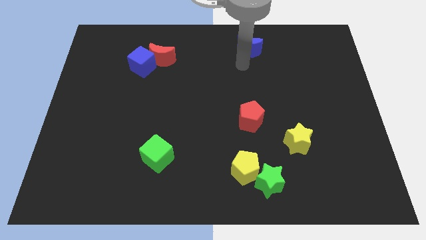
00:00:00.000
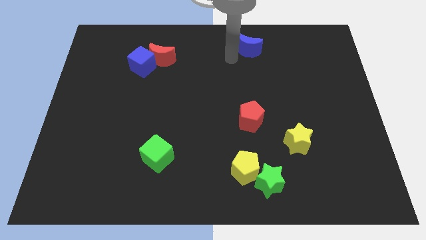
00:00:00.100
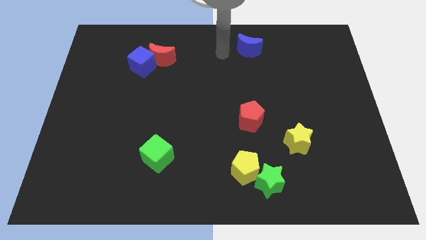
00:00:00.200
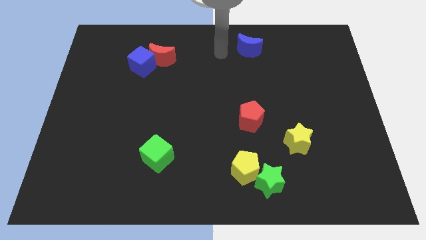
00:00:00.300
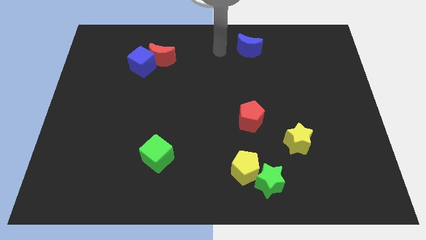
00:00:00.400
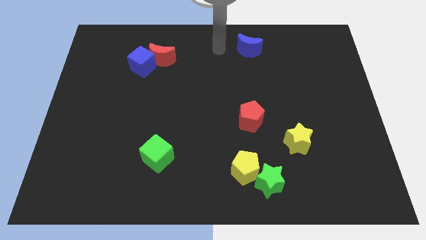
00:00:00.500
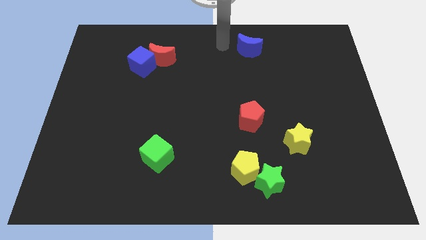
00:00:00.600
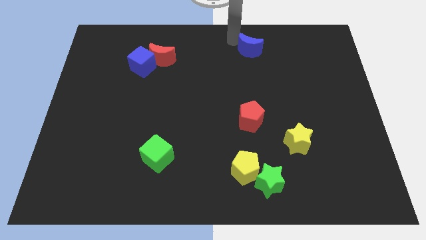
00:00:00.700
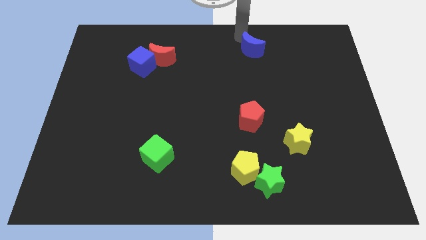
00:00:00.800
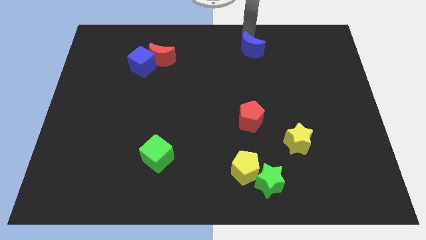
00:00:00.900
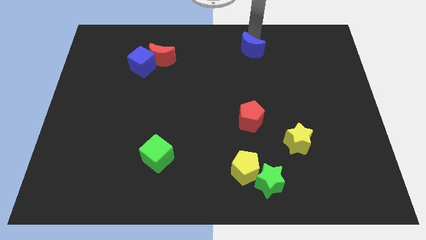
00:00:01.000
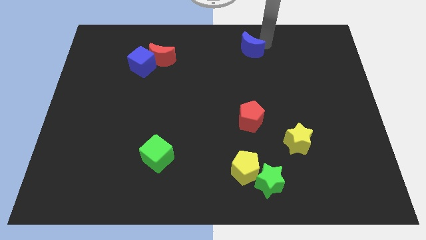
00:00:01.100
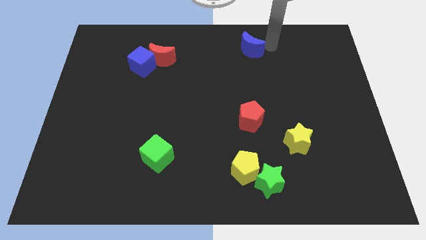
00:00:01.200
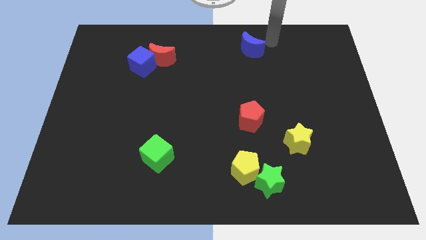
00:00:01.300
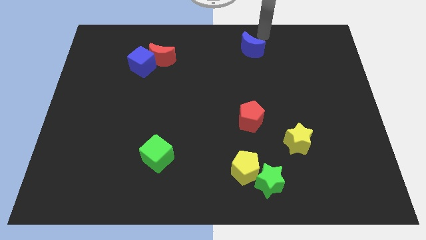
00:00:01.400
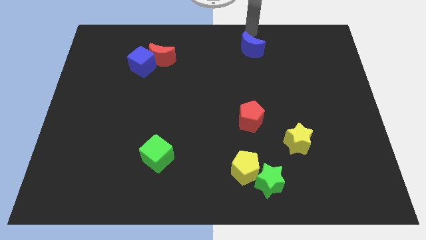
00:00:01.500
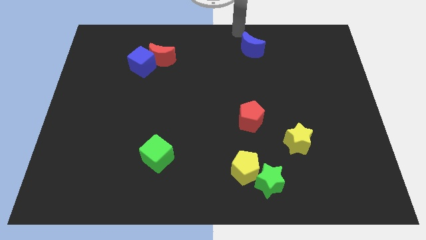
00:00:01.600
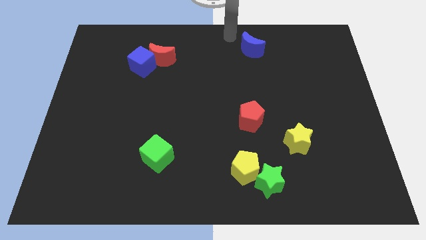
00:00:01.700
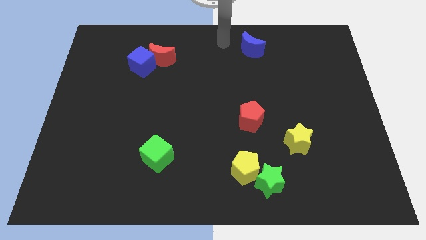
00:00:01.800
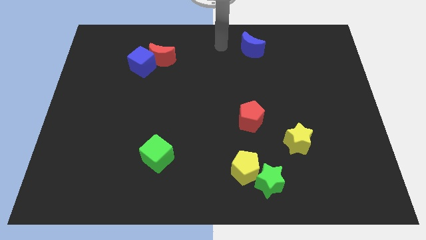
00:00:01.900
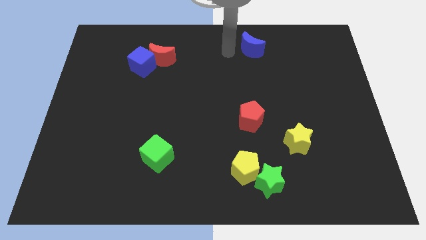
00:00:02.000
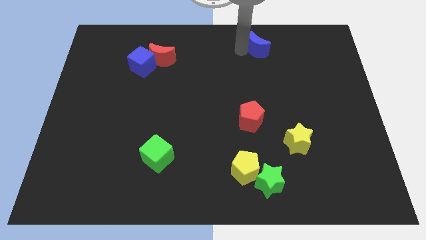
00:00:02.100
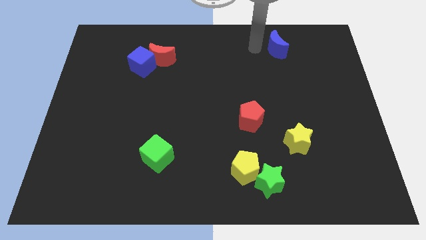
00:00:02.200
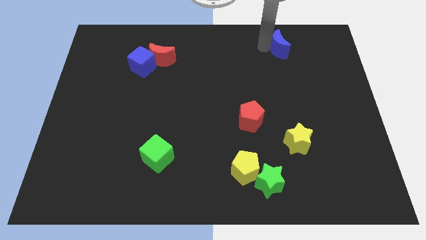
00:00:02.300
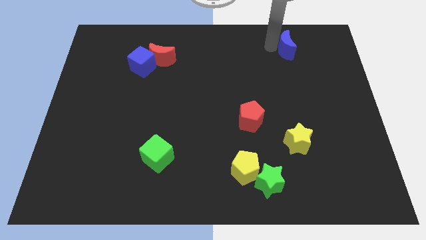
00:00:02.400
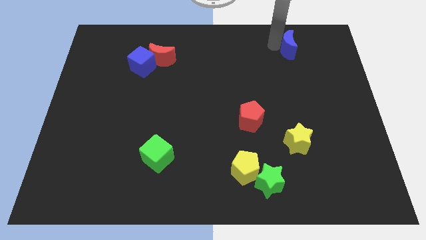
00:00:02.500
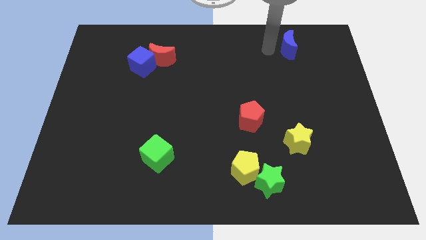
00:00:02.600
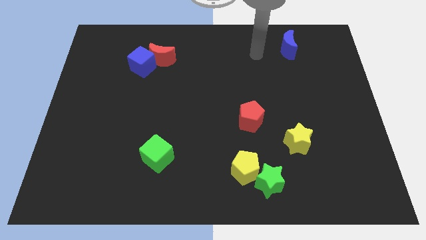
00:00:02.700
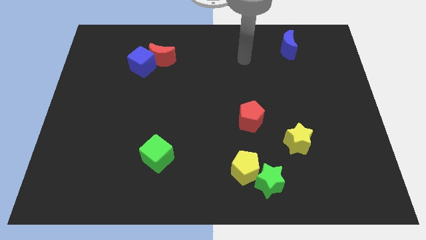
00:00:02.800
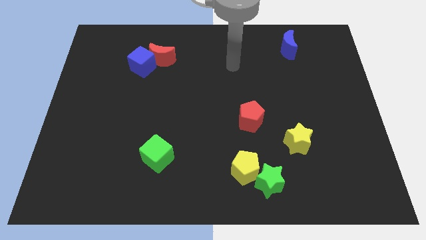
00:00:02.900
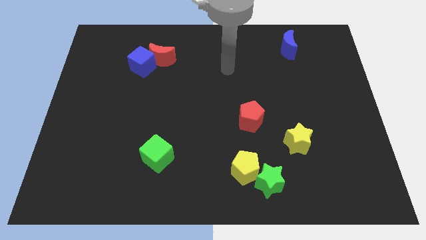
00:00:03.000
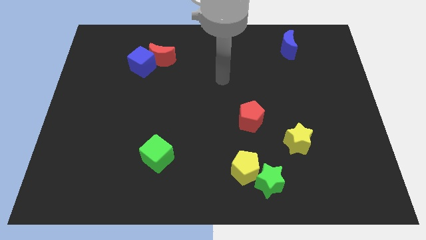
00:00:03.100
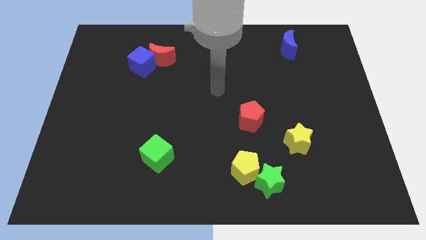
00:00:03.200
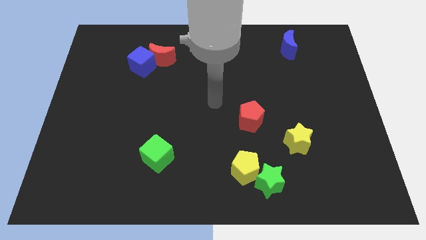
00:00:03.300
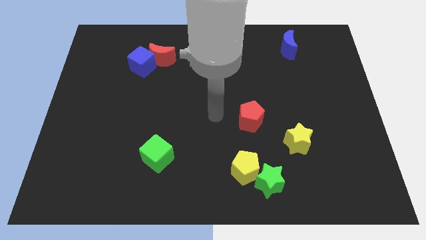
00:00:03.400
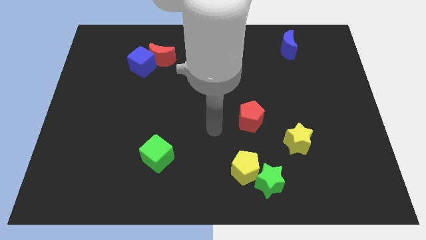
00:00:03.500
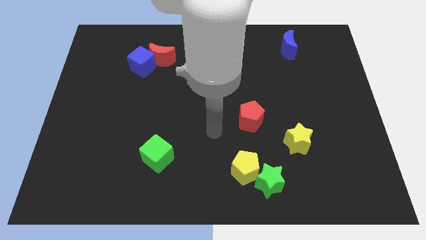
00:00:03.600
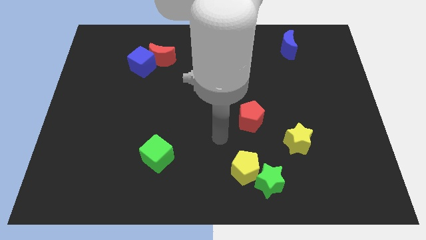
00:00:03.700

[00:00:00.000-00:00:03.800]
slide the blue crescent diagonally top right to the red pentagon

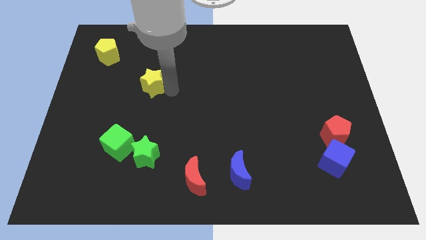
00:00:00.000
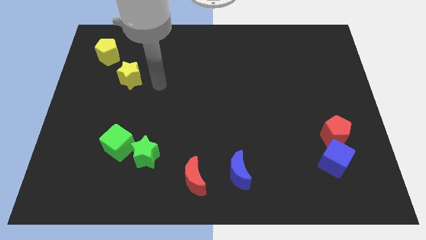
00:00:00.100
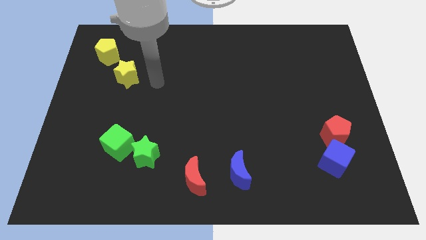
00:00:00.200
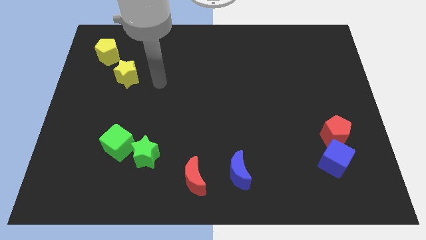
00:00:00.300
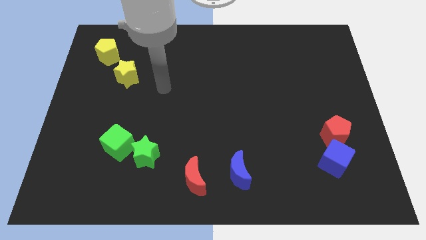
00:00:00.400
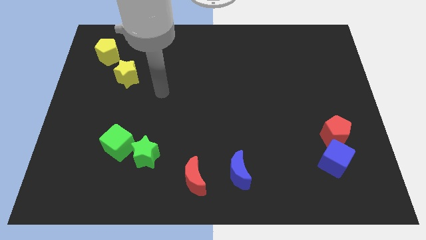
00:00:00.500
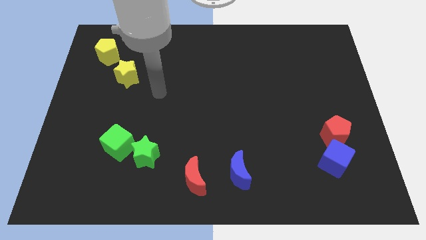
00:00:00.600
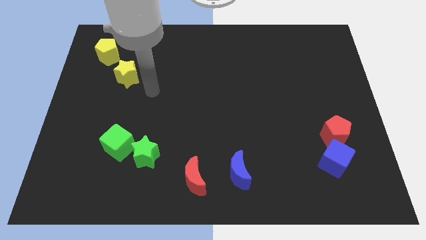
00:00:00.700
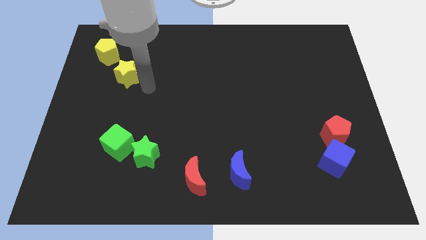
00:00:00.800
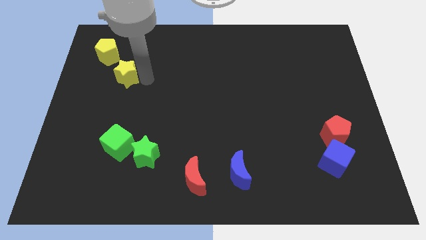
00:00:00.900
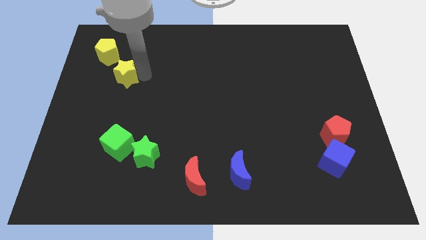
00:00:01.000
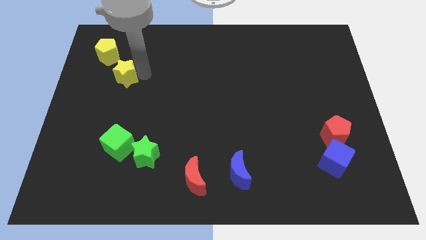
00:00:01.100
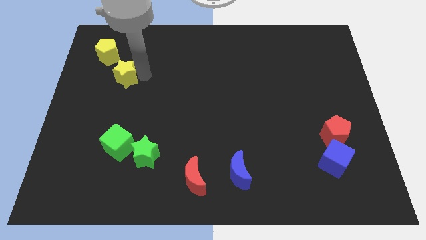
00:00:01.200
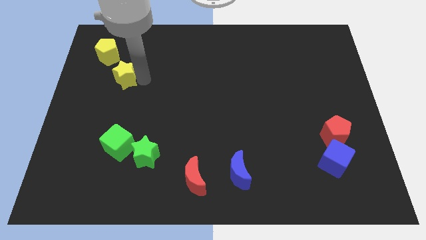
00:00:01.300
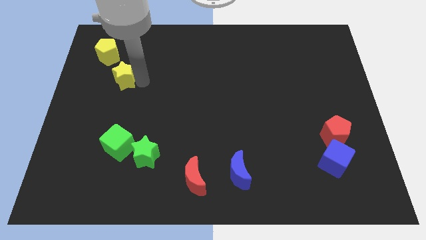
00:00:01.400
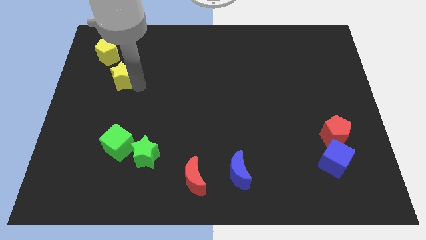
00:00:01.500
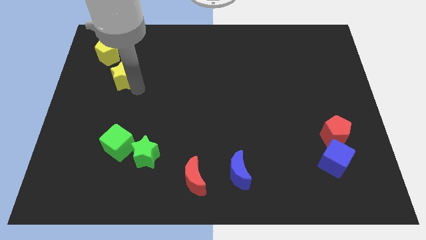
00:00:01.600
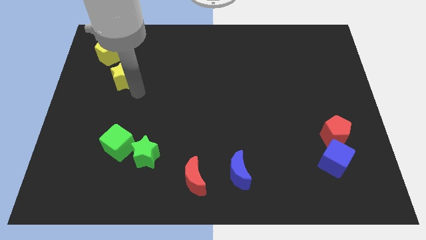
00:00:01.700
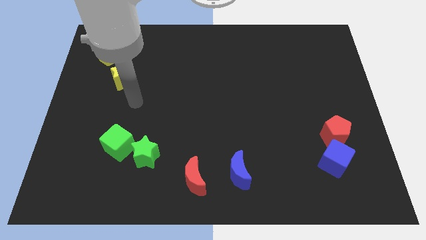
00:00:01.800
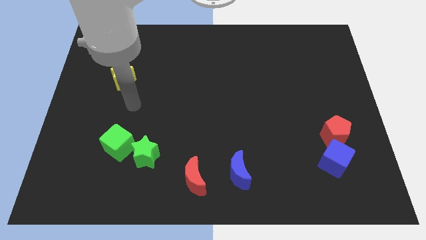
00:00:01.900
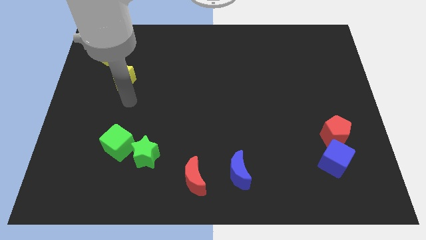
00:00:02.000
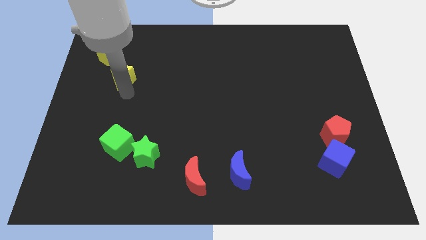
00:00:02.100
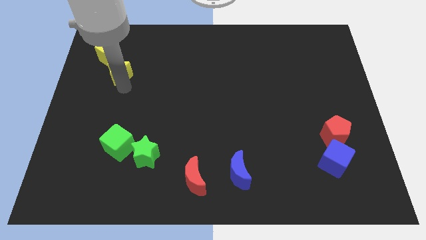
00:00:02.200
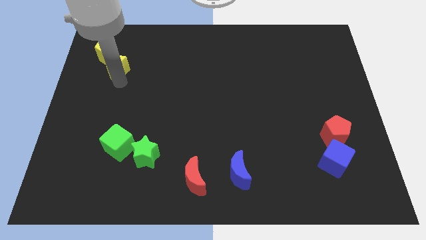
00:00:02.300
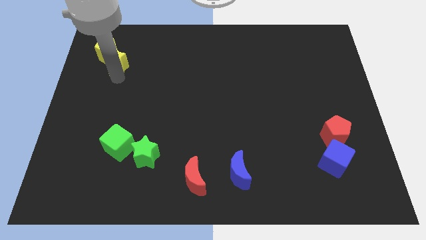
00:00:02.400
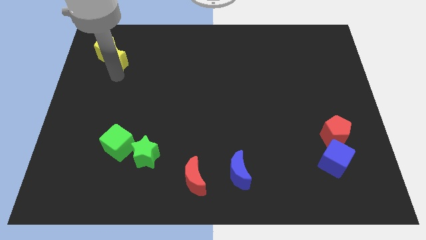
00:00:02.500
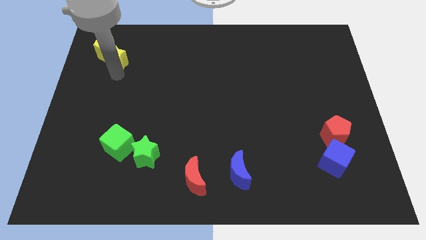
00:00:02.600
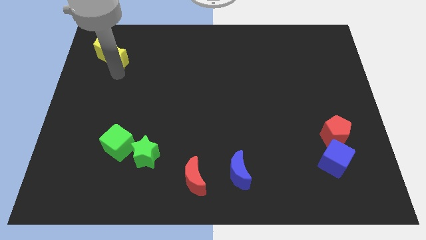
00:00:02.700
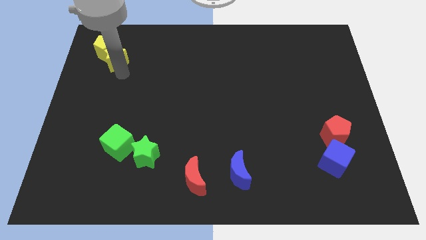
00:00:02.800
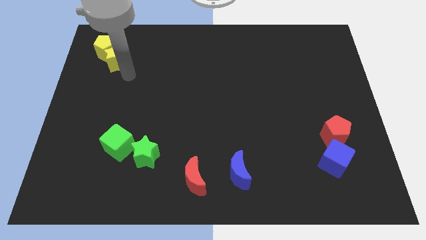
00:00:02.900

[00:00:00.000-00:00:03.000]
push the yellow star into the yellow pentagon

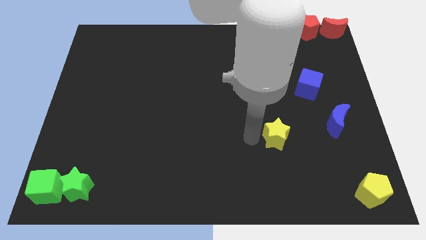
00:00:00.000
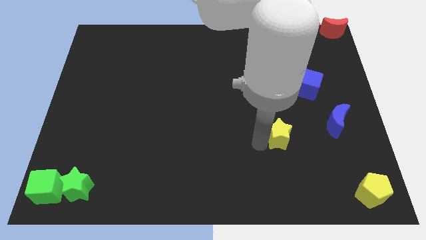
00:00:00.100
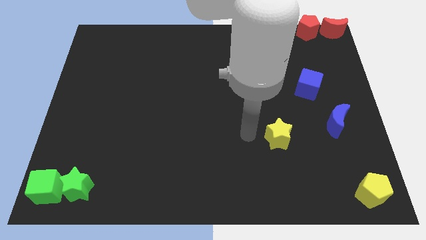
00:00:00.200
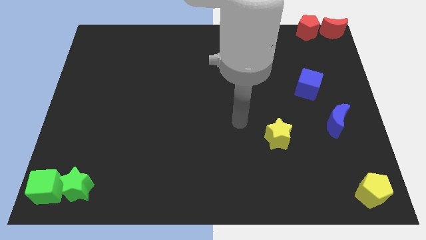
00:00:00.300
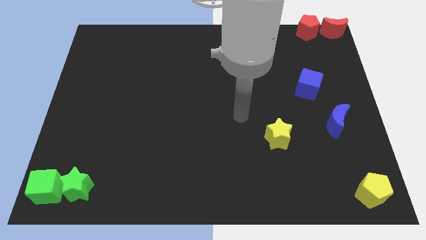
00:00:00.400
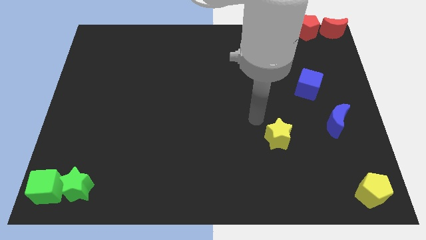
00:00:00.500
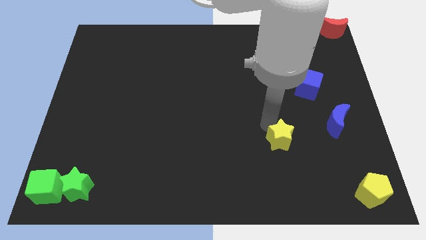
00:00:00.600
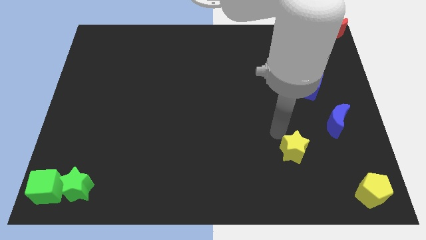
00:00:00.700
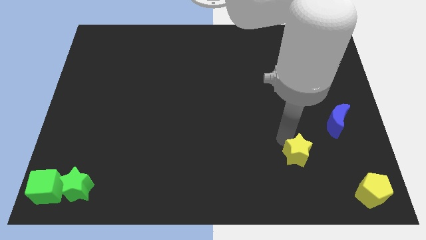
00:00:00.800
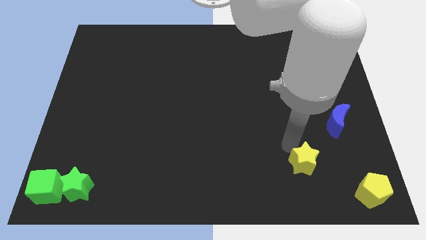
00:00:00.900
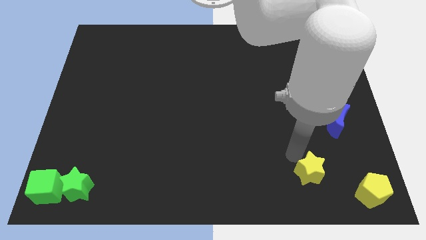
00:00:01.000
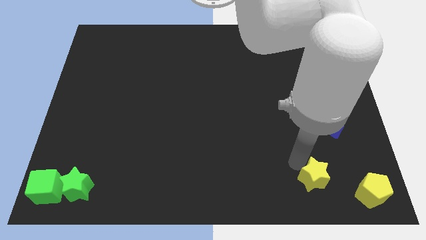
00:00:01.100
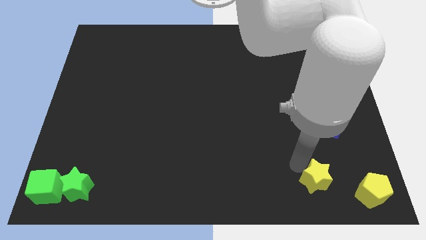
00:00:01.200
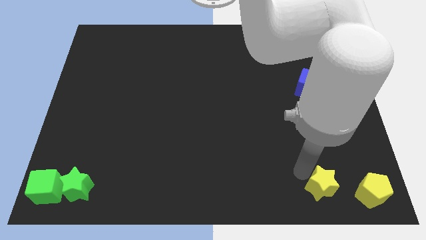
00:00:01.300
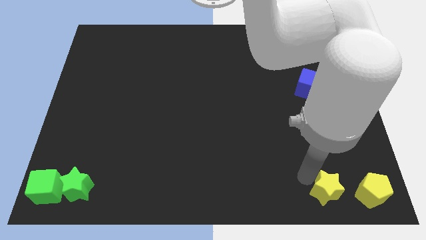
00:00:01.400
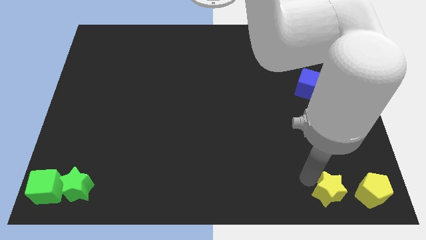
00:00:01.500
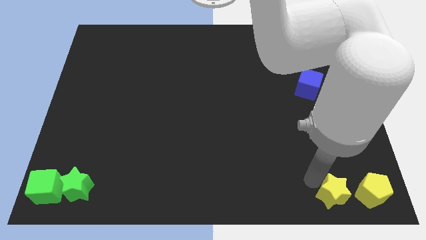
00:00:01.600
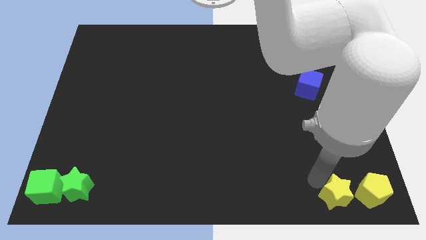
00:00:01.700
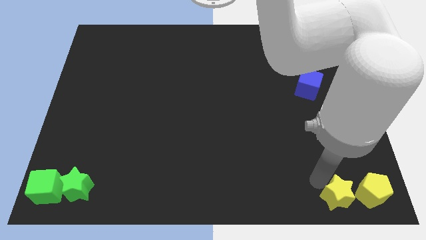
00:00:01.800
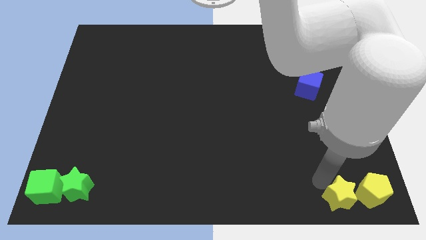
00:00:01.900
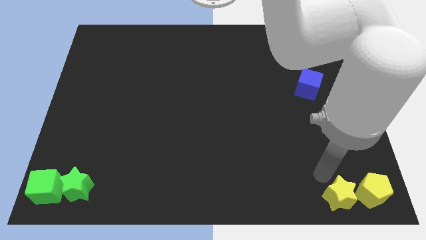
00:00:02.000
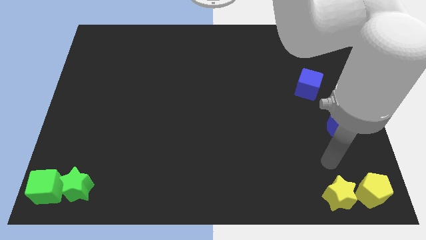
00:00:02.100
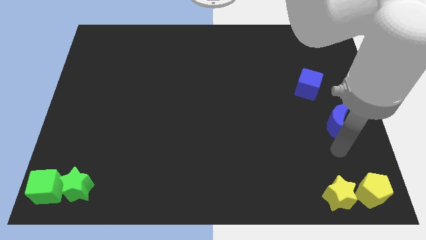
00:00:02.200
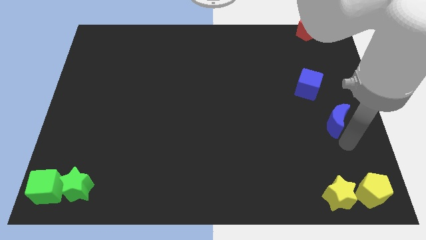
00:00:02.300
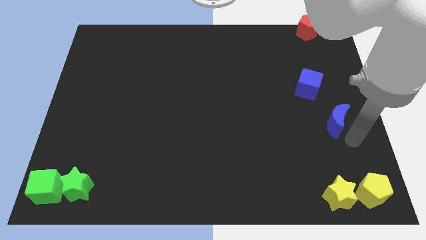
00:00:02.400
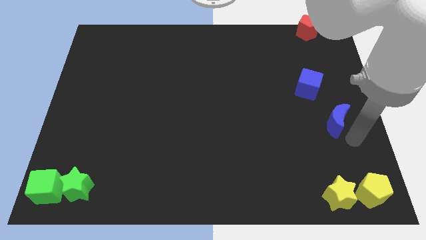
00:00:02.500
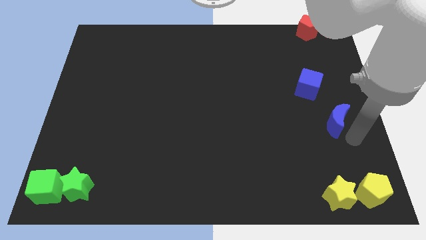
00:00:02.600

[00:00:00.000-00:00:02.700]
move the yellow star to the left of yellow pentgaon at the bottom right of the board
